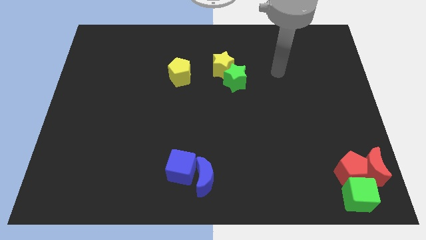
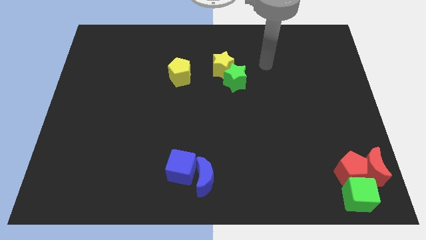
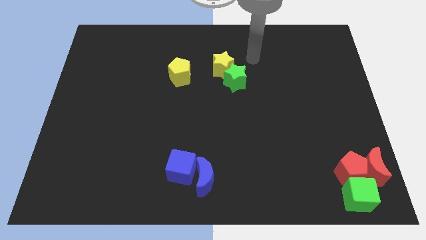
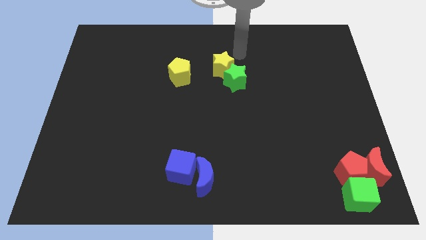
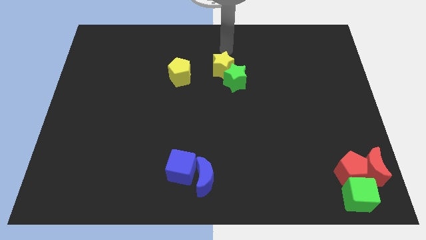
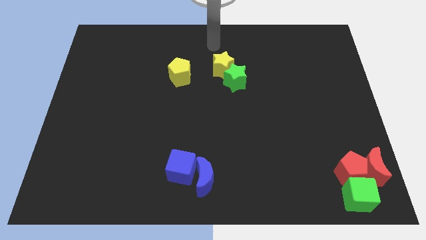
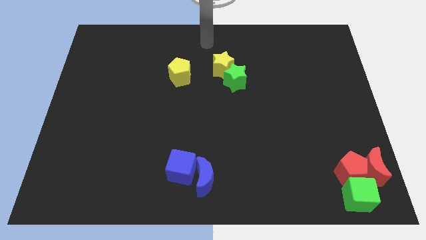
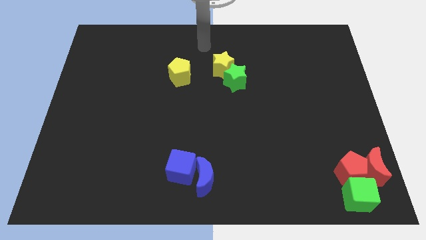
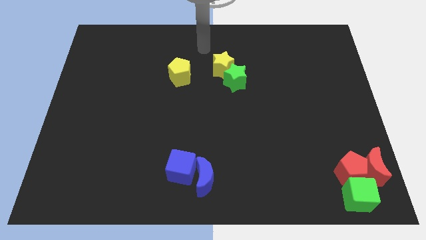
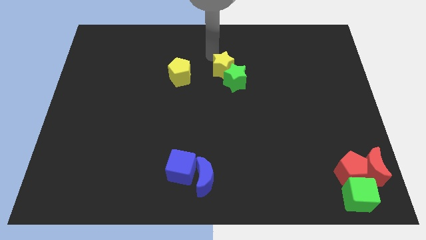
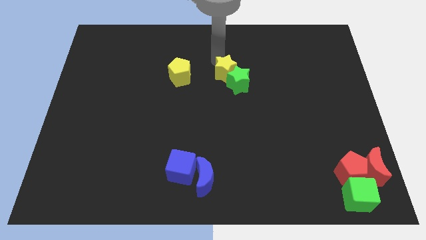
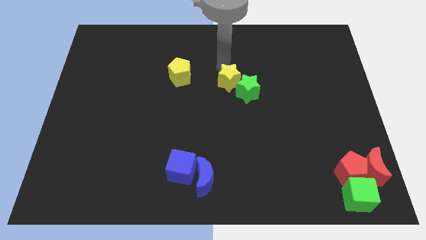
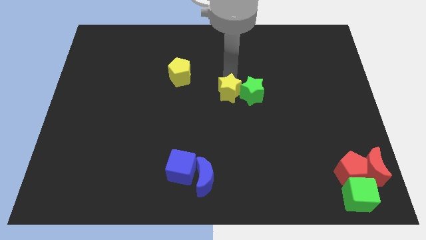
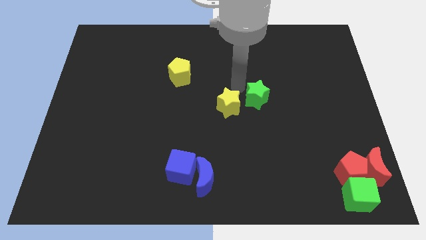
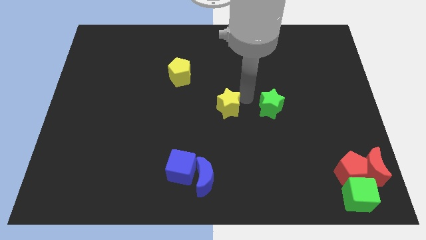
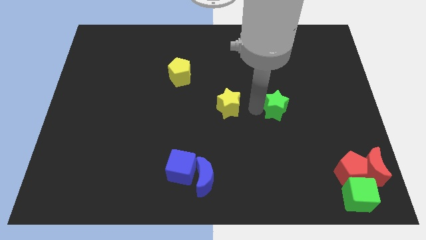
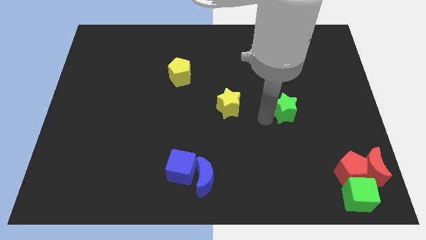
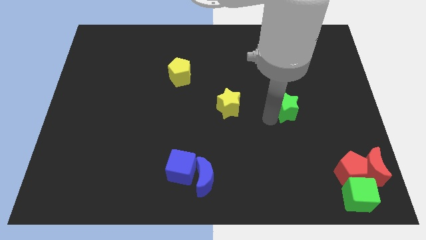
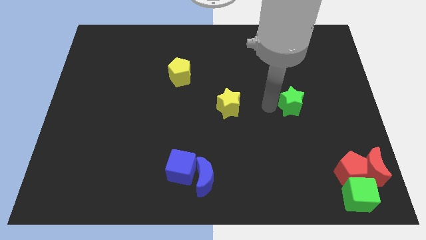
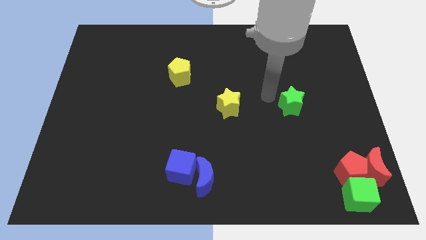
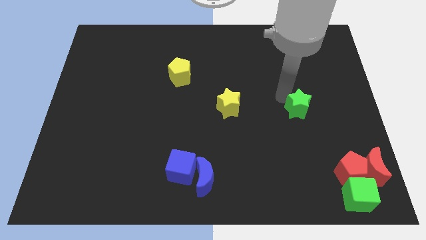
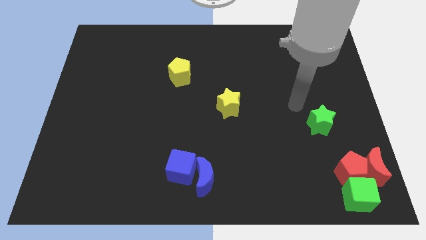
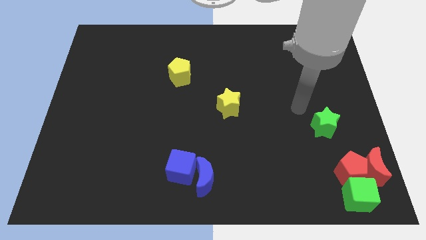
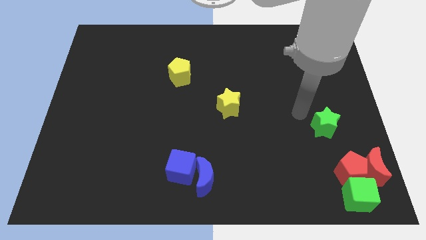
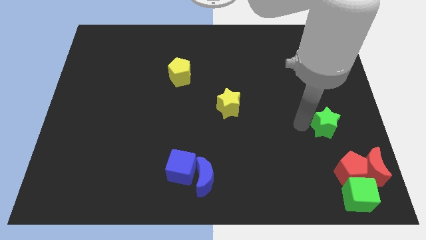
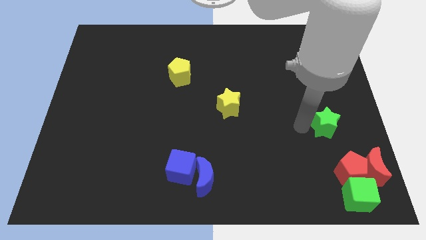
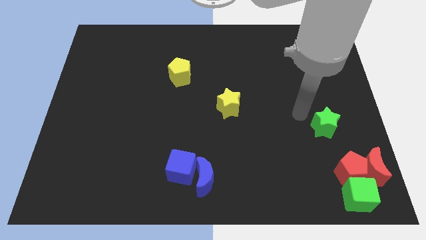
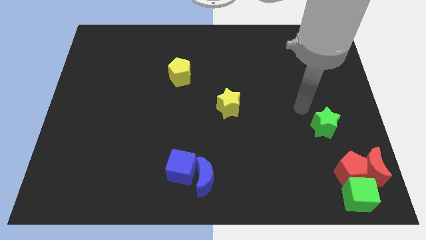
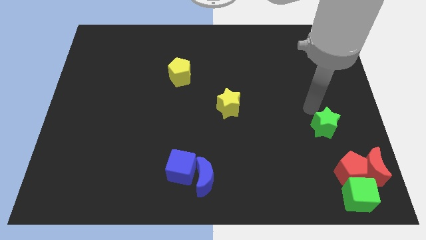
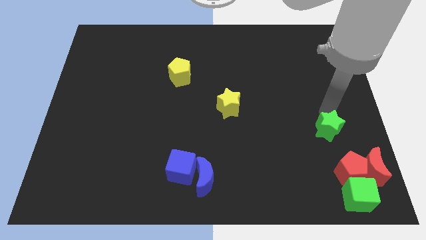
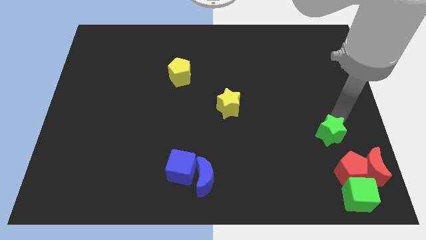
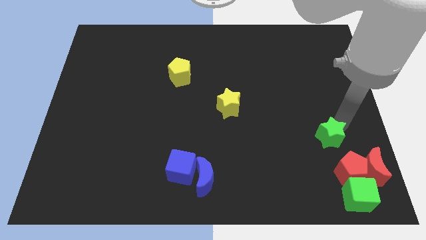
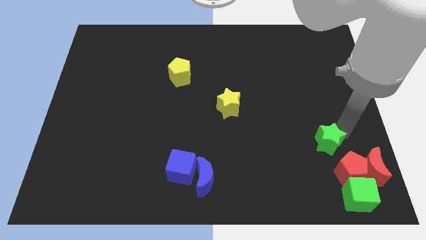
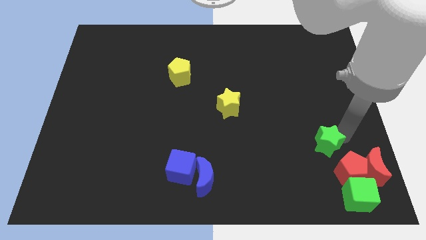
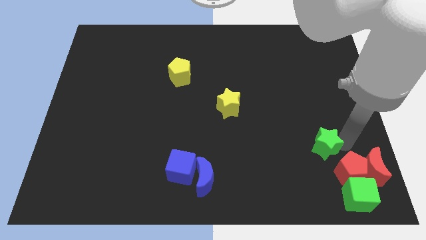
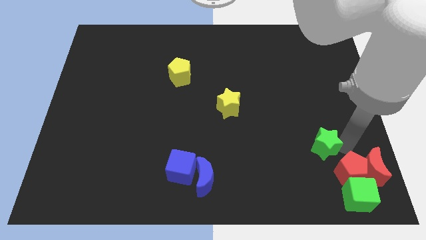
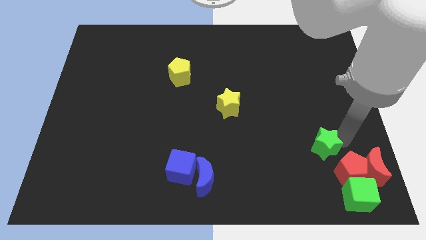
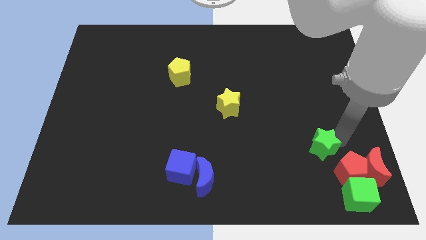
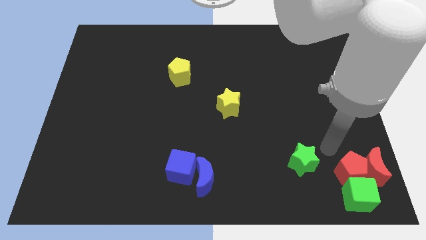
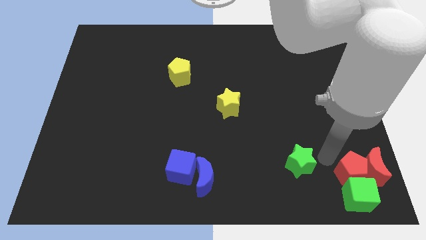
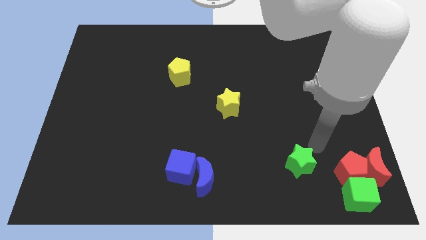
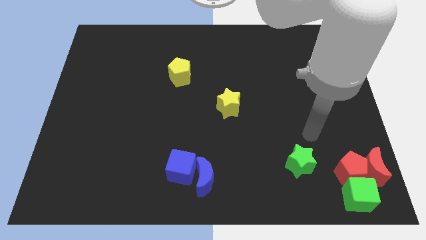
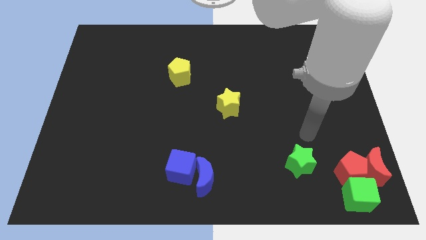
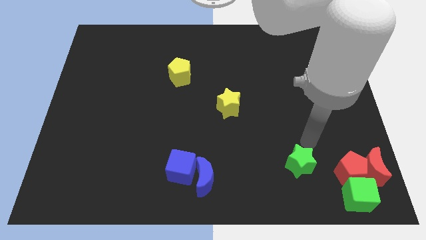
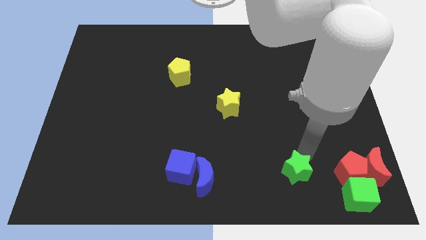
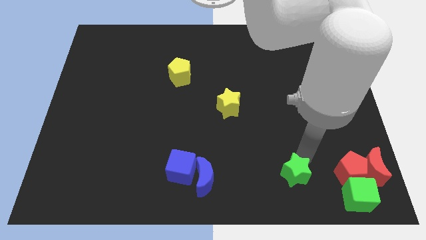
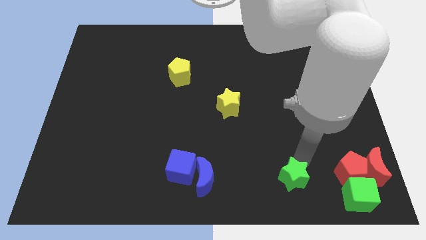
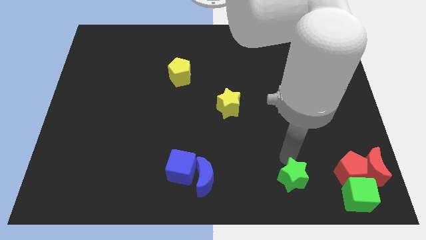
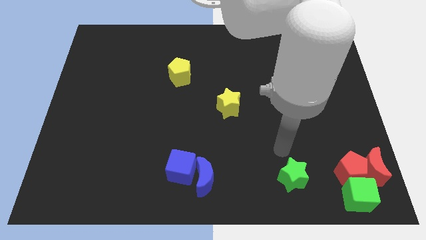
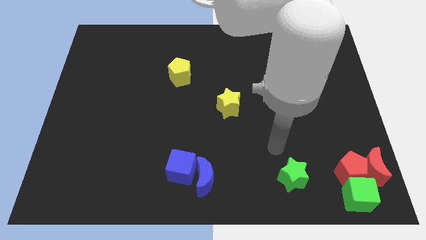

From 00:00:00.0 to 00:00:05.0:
place the green star to the left of the red pentagon

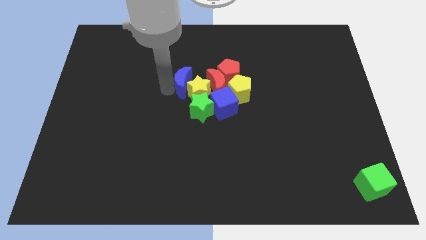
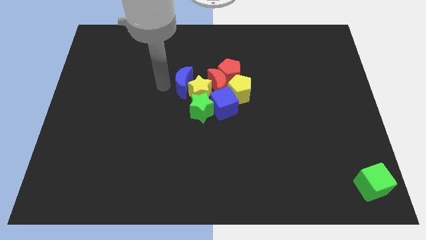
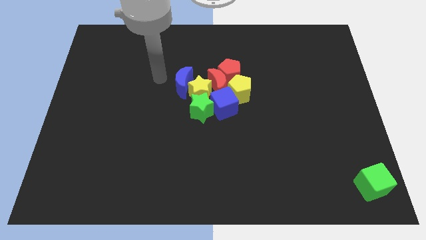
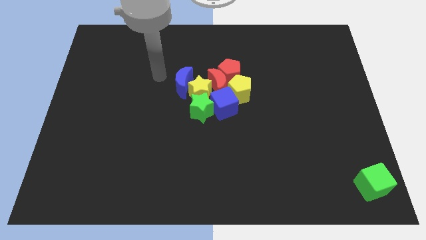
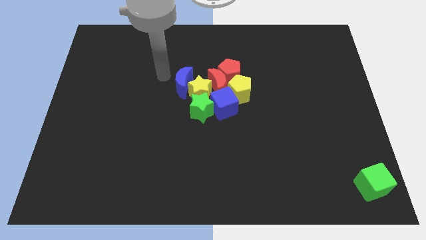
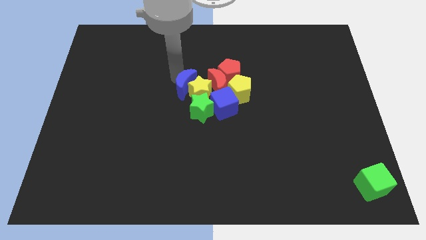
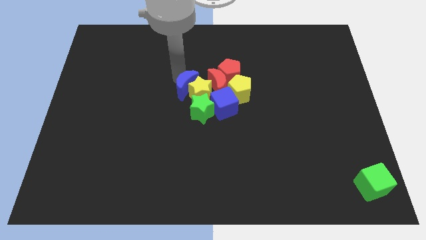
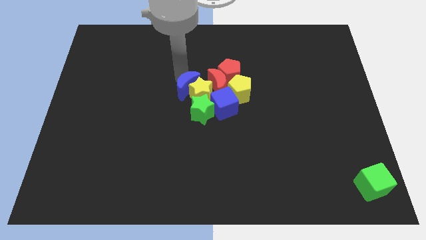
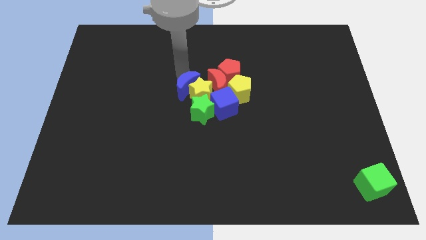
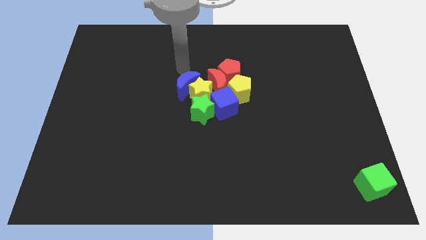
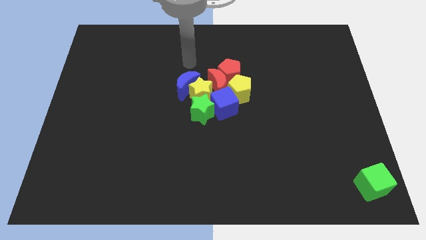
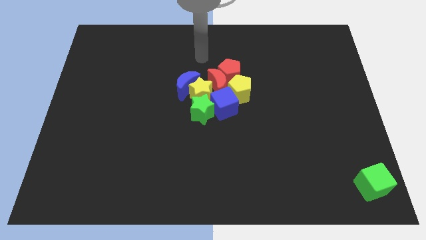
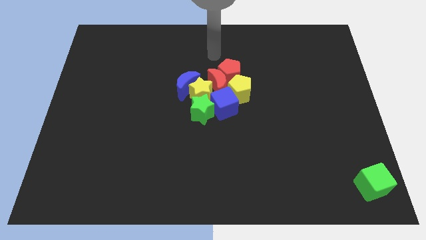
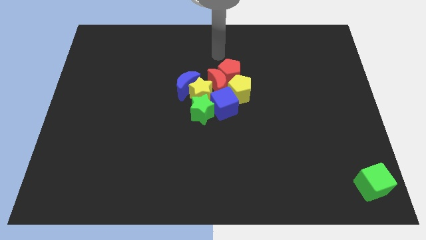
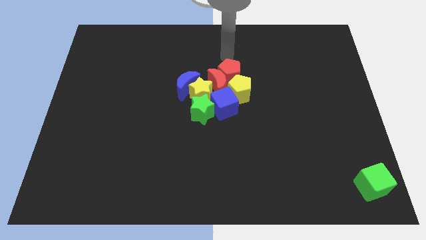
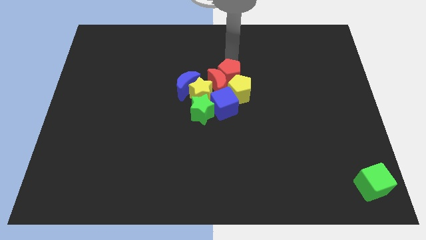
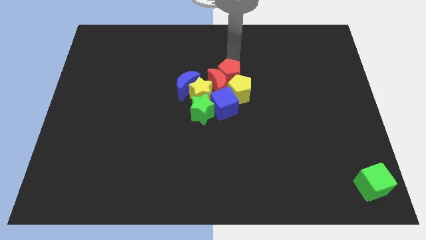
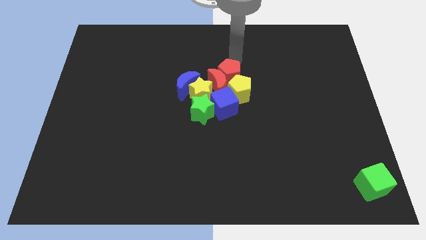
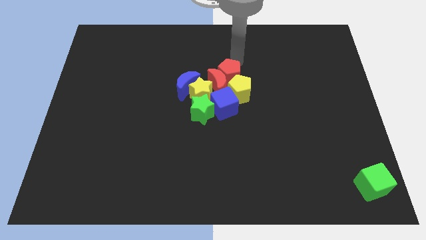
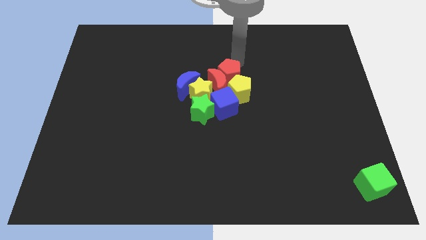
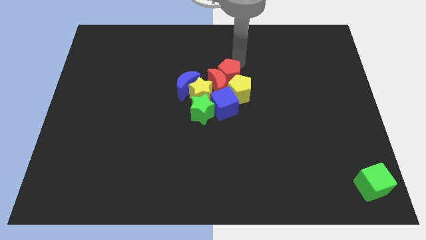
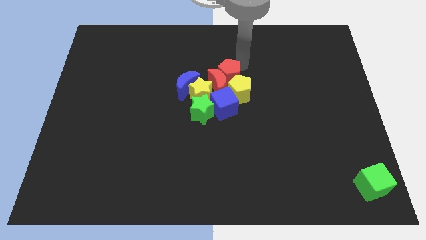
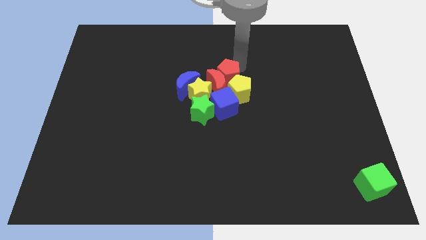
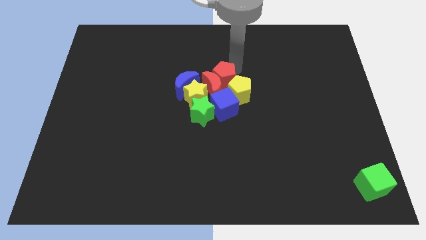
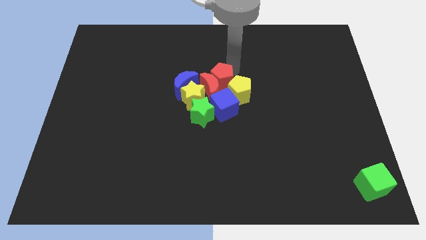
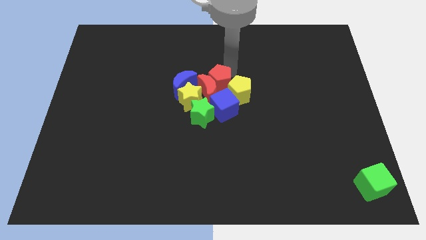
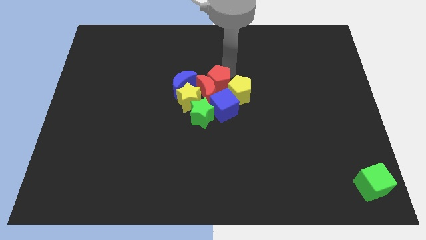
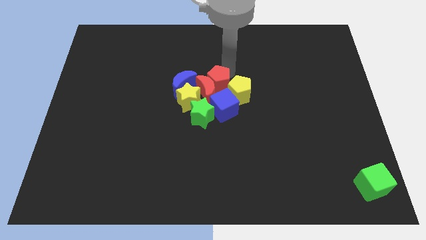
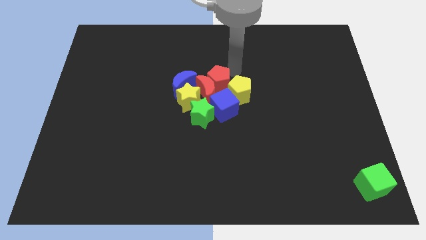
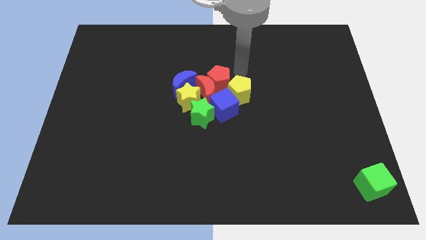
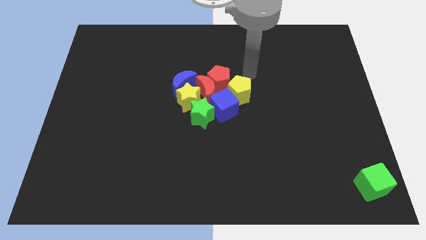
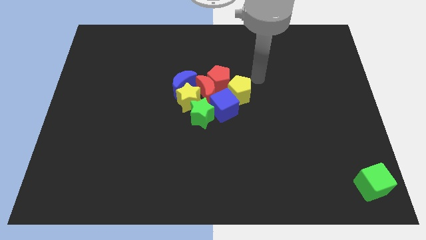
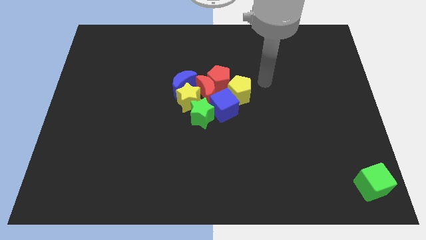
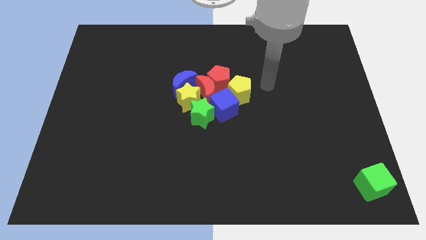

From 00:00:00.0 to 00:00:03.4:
adjust the group of blocks close to each other

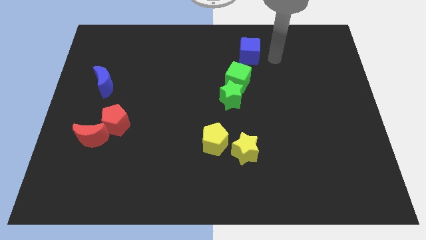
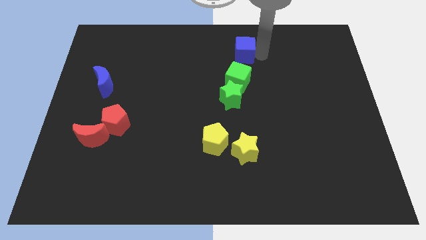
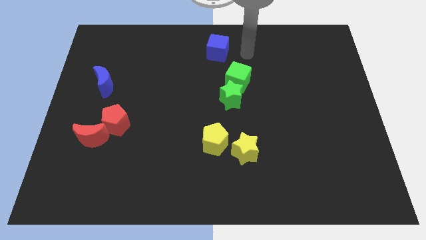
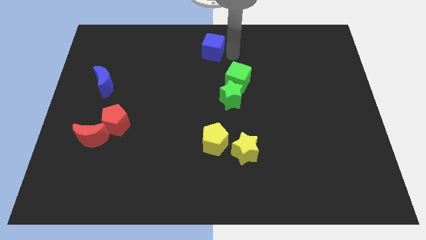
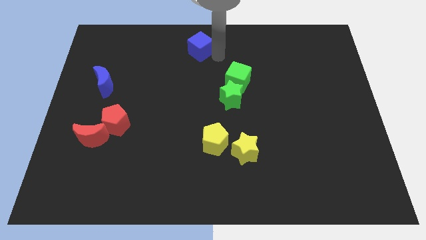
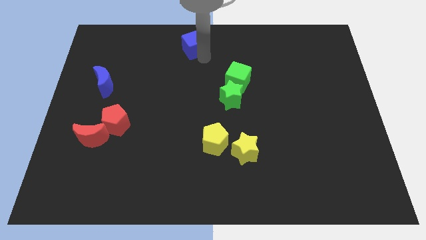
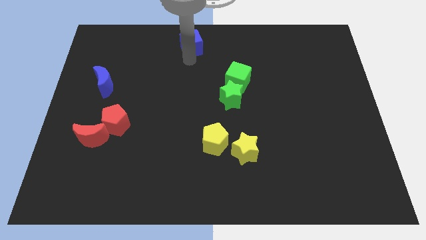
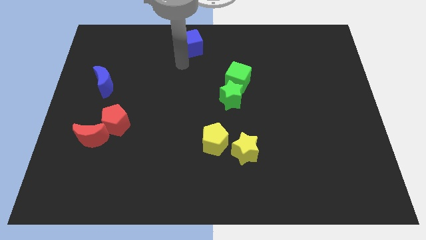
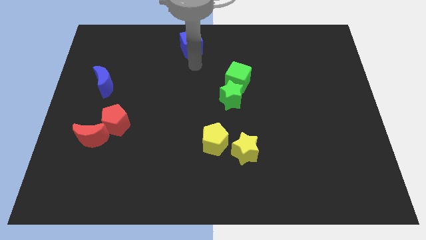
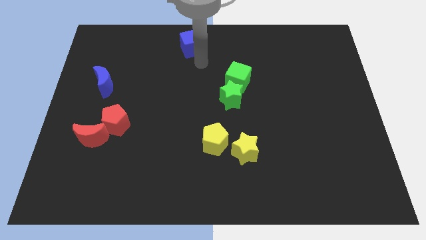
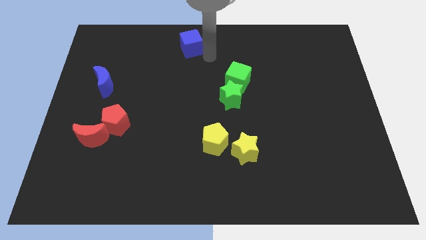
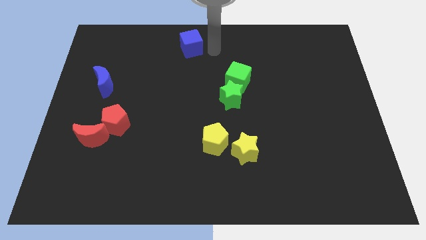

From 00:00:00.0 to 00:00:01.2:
move the blue cube towards the top left corner of the board
